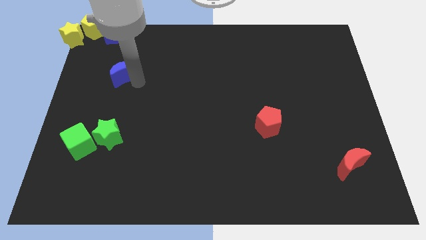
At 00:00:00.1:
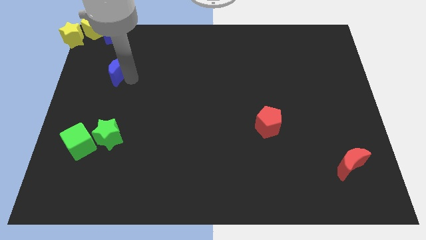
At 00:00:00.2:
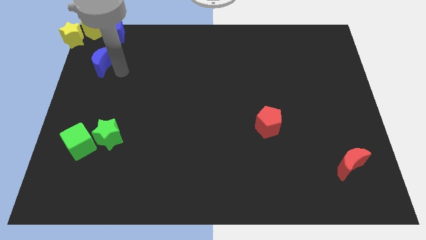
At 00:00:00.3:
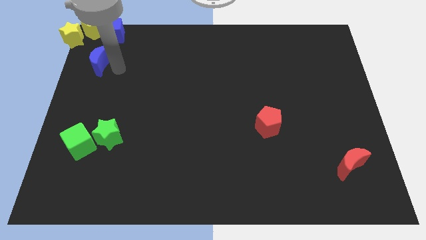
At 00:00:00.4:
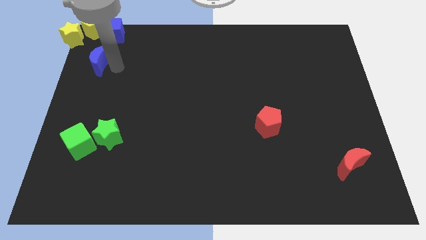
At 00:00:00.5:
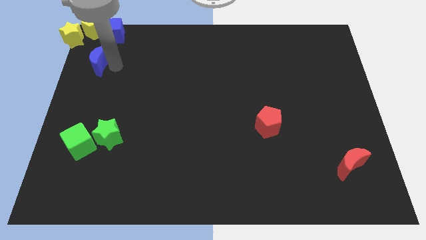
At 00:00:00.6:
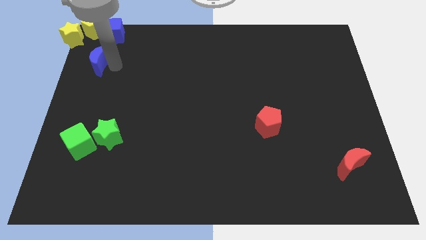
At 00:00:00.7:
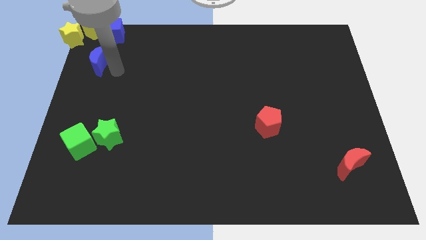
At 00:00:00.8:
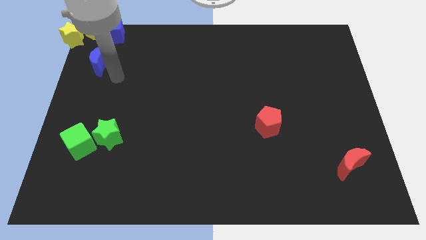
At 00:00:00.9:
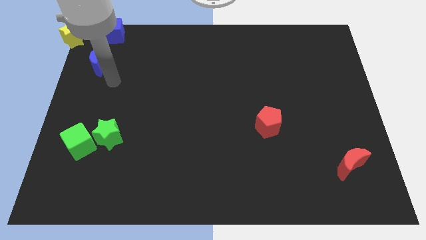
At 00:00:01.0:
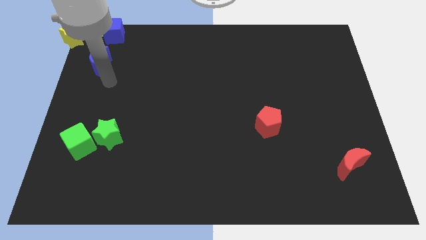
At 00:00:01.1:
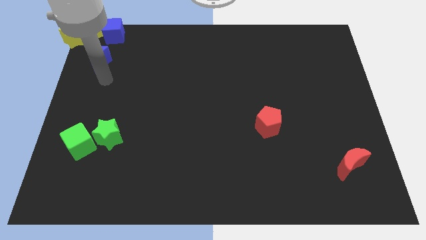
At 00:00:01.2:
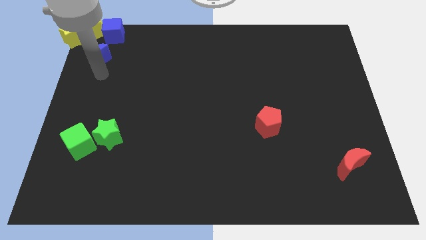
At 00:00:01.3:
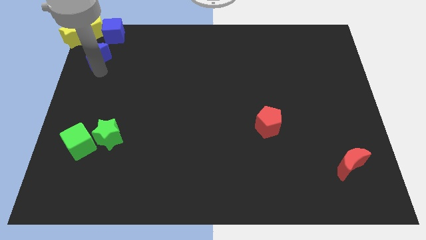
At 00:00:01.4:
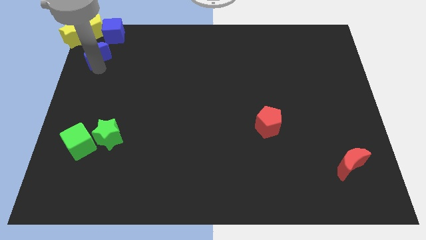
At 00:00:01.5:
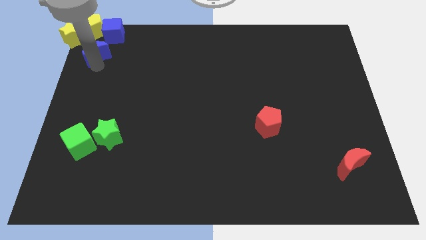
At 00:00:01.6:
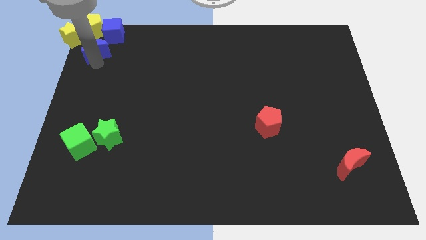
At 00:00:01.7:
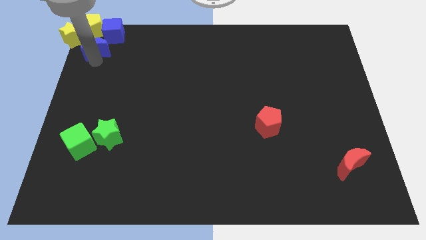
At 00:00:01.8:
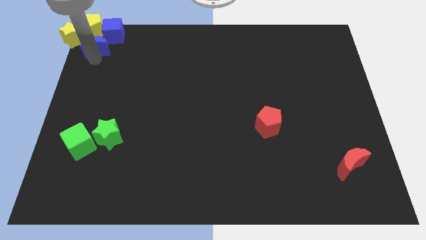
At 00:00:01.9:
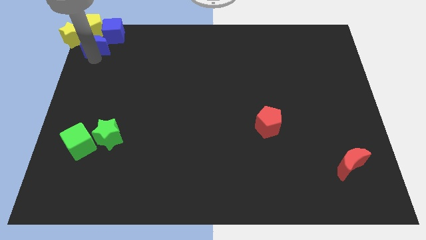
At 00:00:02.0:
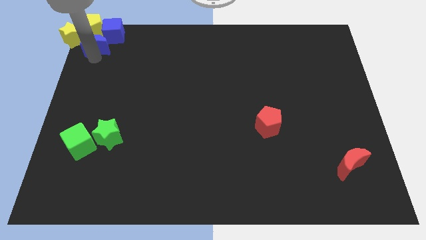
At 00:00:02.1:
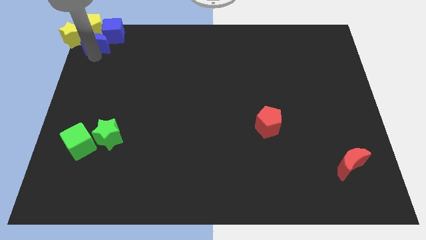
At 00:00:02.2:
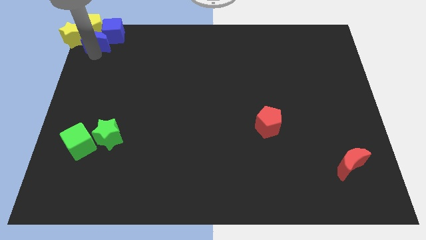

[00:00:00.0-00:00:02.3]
move the blue crescent to the bottom of the yellow pentagon

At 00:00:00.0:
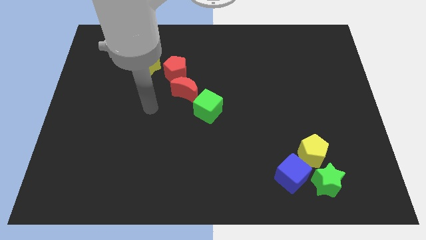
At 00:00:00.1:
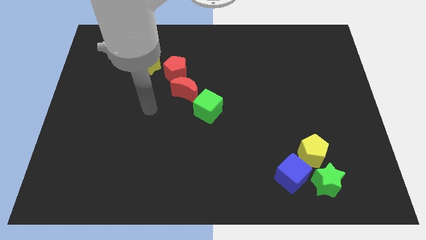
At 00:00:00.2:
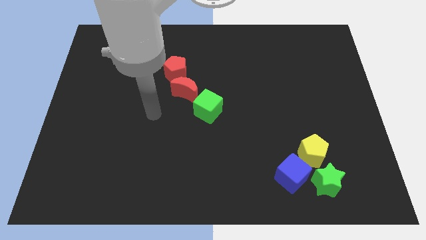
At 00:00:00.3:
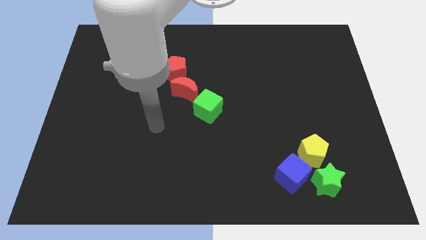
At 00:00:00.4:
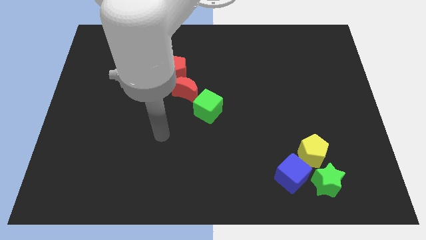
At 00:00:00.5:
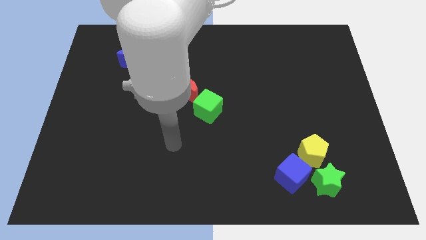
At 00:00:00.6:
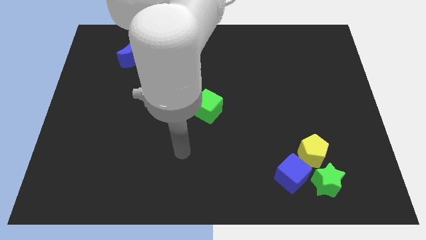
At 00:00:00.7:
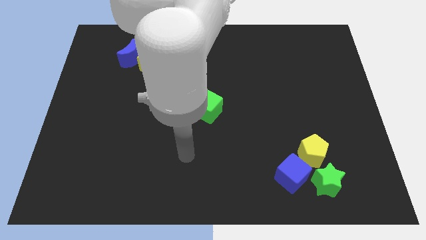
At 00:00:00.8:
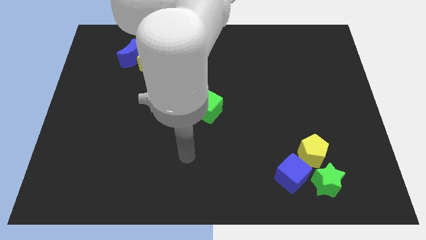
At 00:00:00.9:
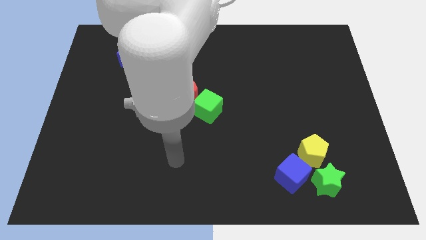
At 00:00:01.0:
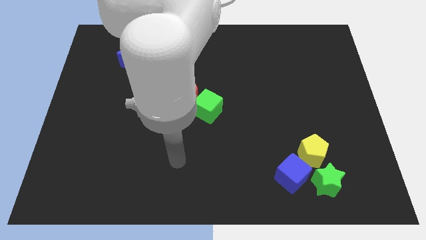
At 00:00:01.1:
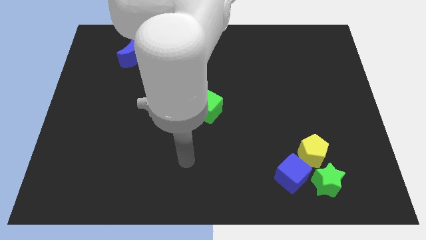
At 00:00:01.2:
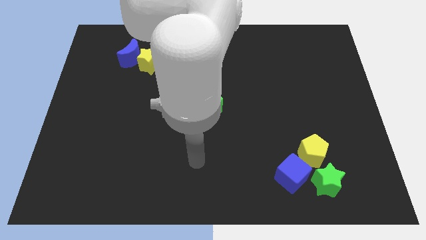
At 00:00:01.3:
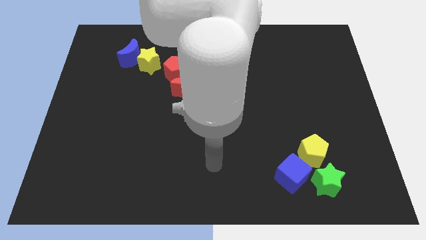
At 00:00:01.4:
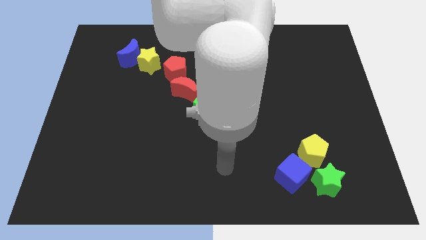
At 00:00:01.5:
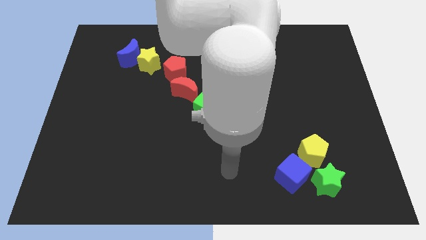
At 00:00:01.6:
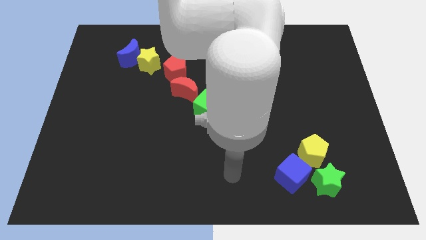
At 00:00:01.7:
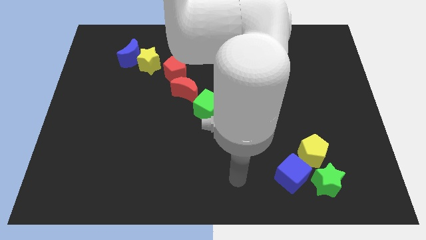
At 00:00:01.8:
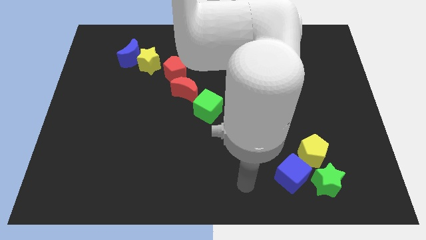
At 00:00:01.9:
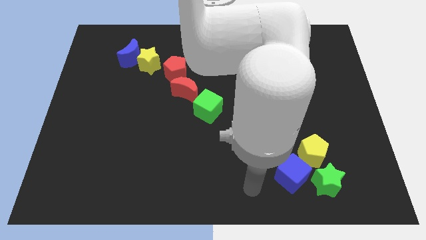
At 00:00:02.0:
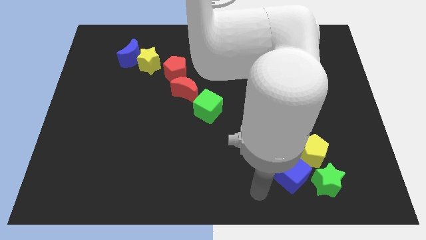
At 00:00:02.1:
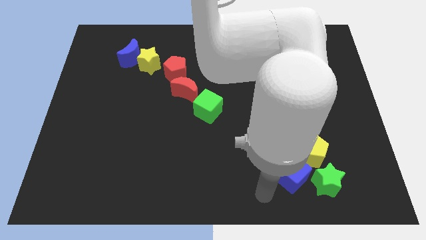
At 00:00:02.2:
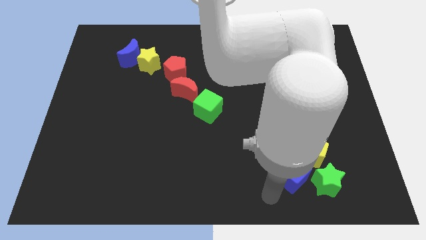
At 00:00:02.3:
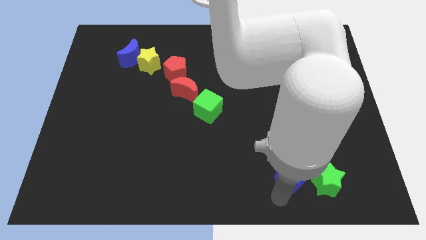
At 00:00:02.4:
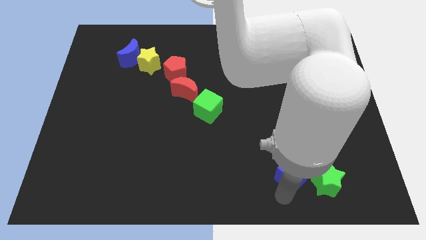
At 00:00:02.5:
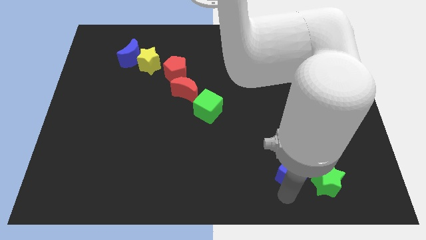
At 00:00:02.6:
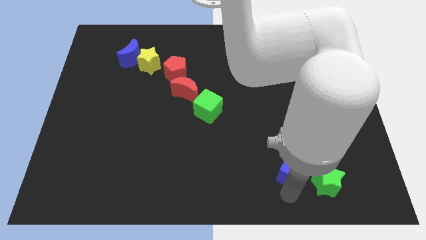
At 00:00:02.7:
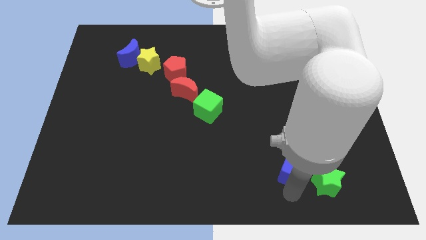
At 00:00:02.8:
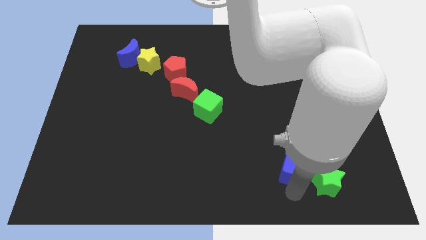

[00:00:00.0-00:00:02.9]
point your arm to the bottom of the blue cube

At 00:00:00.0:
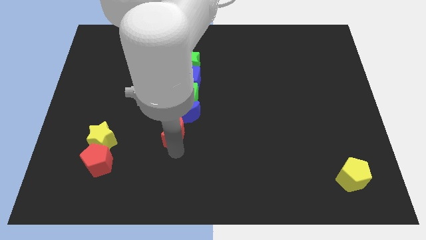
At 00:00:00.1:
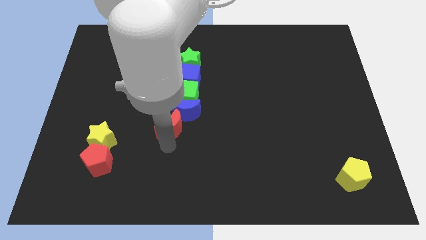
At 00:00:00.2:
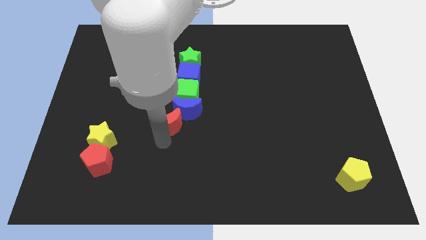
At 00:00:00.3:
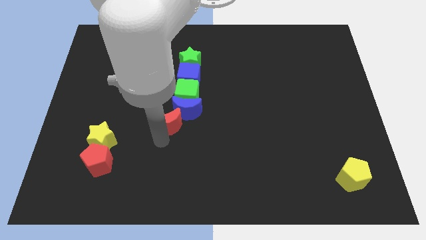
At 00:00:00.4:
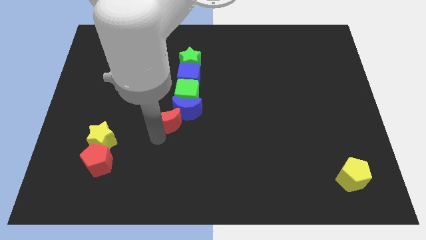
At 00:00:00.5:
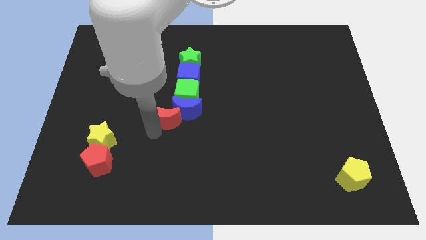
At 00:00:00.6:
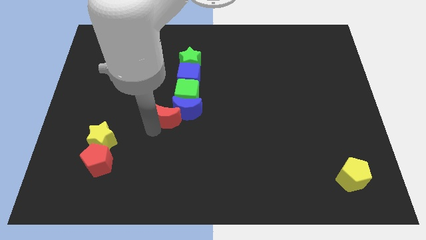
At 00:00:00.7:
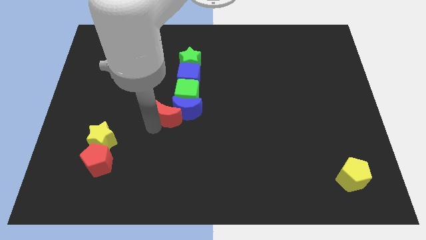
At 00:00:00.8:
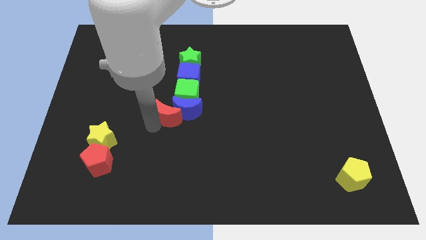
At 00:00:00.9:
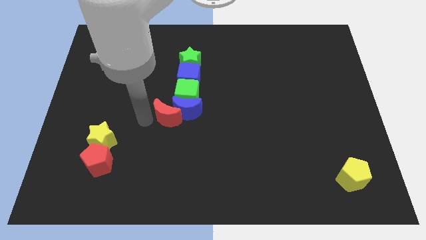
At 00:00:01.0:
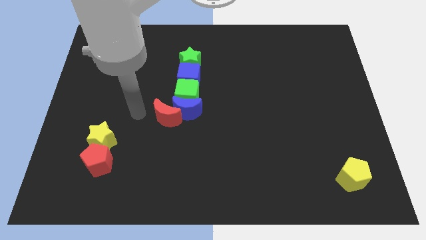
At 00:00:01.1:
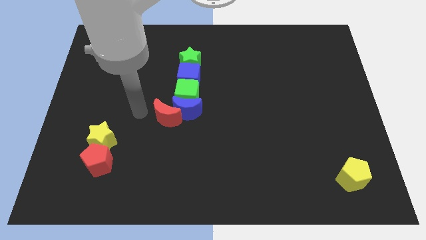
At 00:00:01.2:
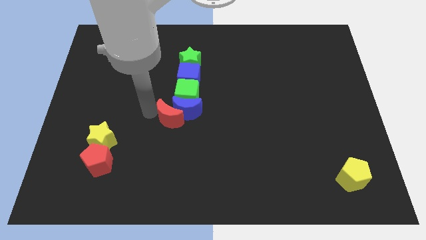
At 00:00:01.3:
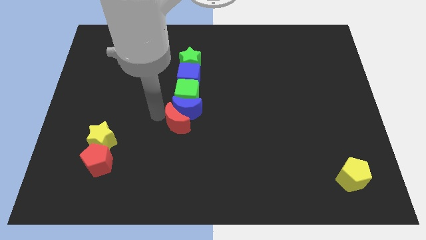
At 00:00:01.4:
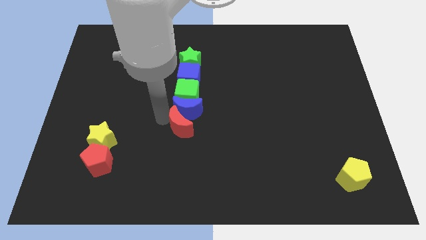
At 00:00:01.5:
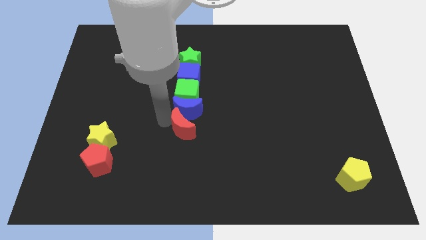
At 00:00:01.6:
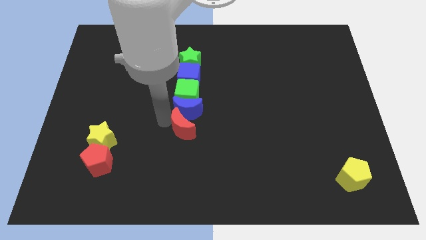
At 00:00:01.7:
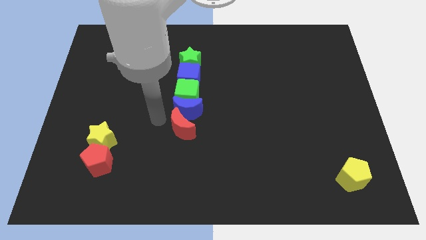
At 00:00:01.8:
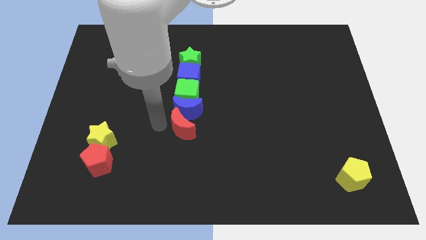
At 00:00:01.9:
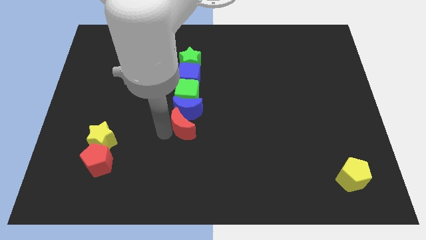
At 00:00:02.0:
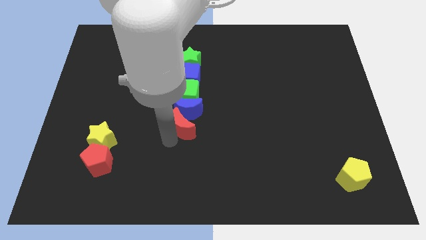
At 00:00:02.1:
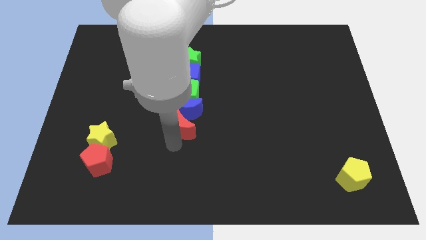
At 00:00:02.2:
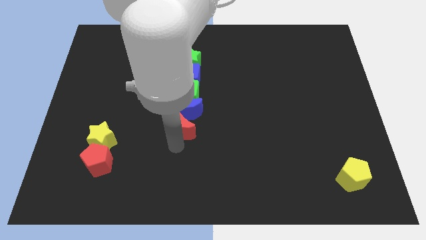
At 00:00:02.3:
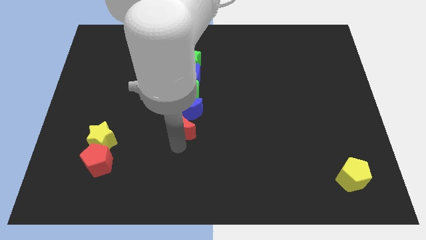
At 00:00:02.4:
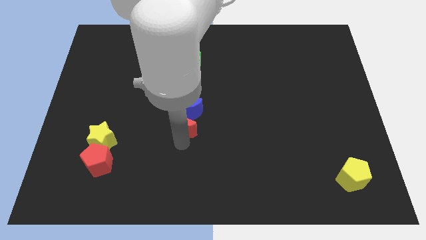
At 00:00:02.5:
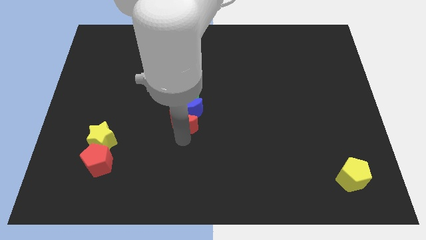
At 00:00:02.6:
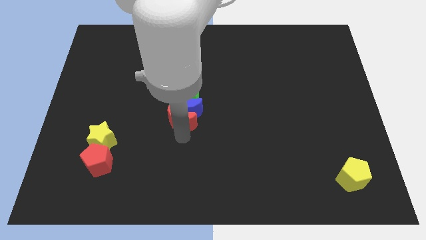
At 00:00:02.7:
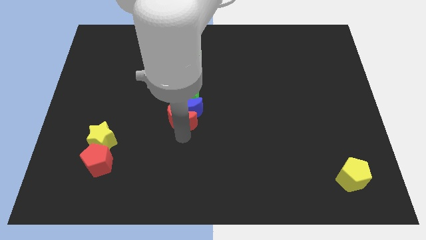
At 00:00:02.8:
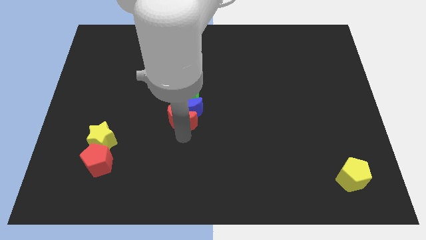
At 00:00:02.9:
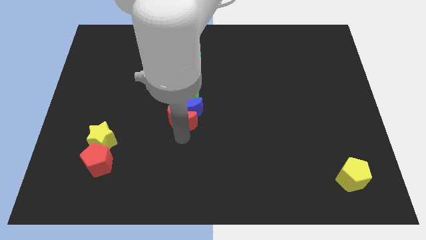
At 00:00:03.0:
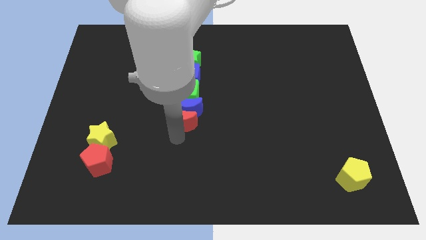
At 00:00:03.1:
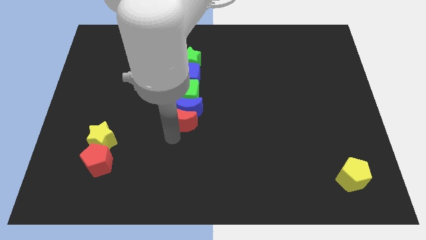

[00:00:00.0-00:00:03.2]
move the red crescent below to the blue crescent

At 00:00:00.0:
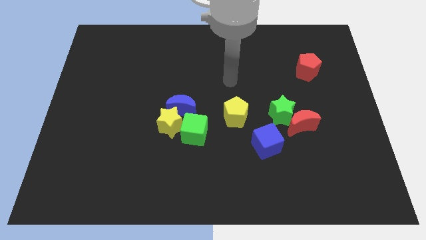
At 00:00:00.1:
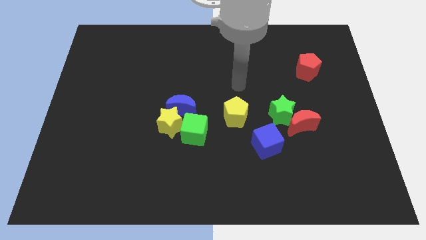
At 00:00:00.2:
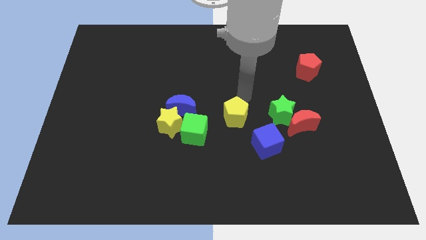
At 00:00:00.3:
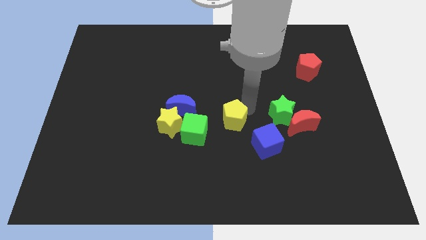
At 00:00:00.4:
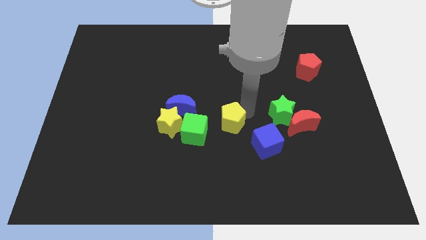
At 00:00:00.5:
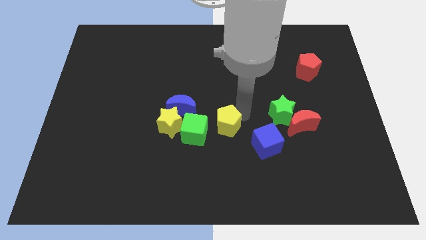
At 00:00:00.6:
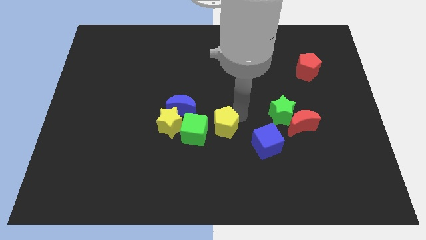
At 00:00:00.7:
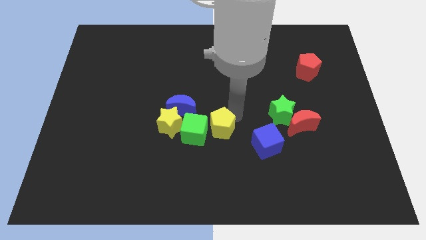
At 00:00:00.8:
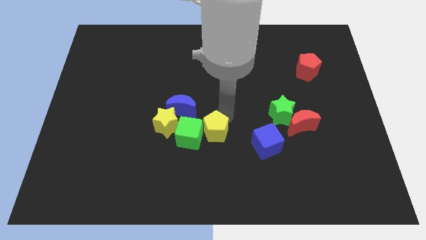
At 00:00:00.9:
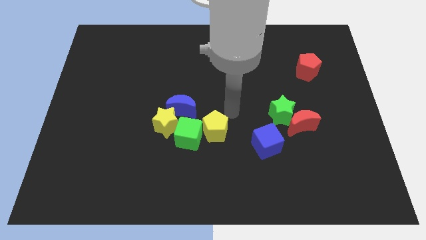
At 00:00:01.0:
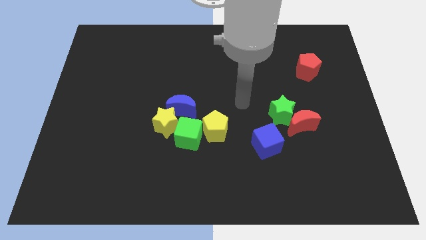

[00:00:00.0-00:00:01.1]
push the yellow pentagon into the green cube
